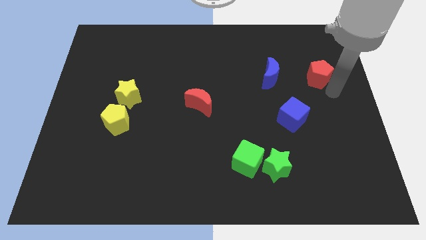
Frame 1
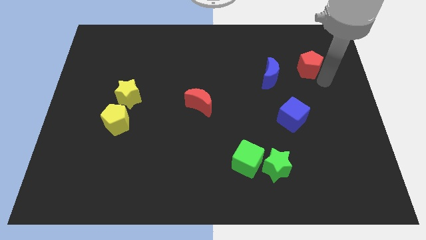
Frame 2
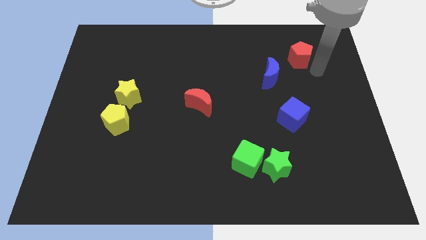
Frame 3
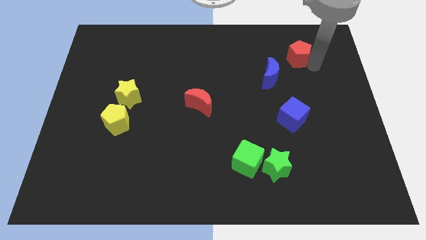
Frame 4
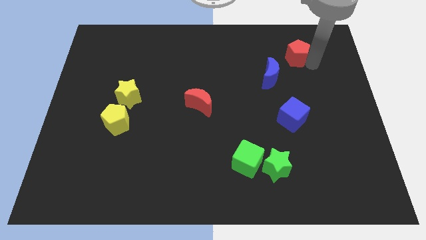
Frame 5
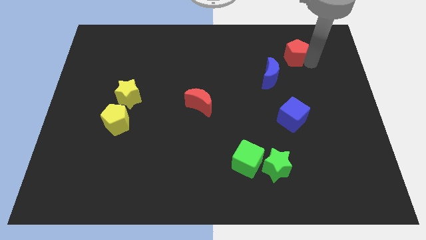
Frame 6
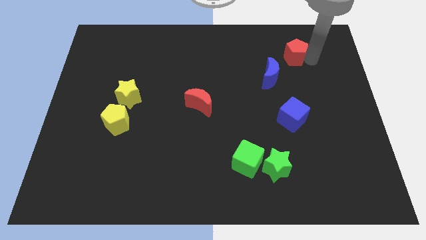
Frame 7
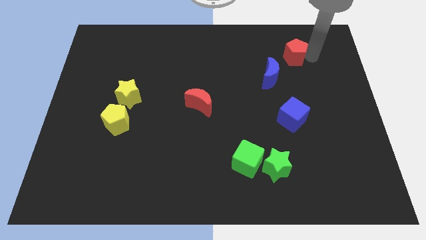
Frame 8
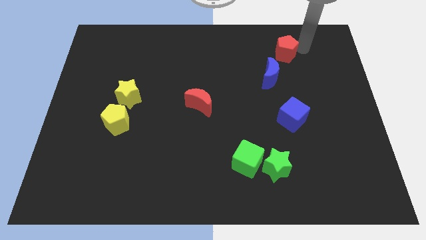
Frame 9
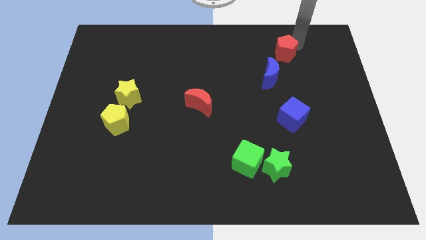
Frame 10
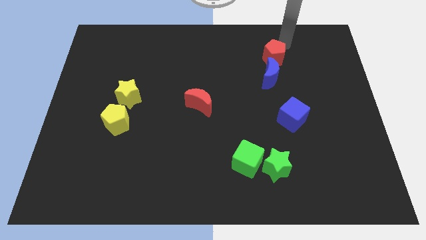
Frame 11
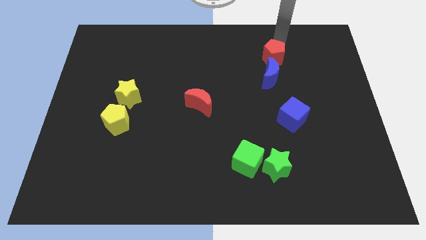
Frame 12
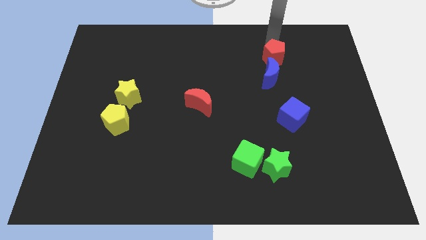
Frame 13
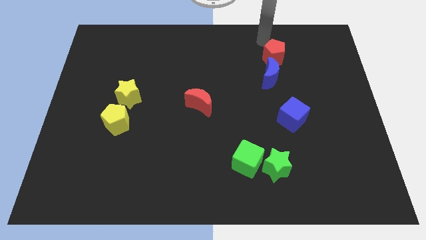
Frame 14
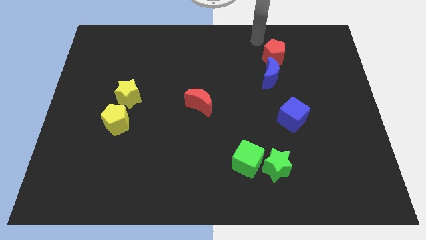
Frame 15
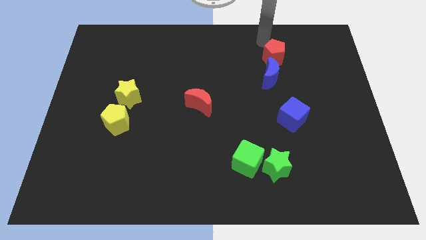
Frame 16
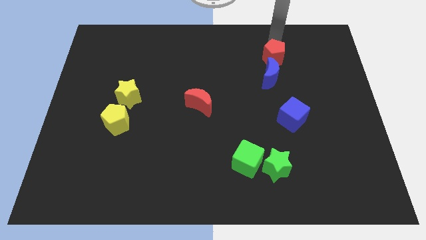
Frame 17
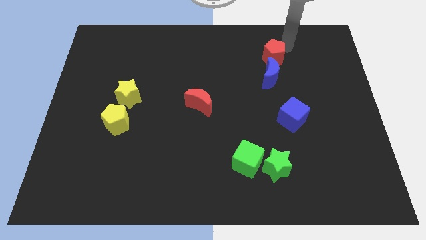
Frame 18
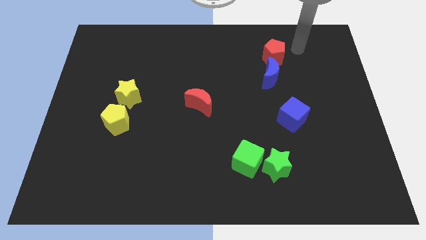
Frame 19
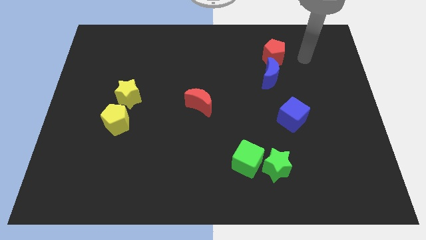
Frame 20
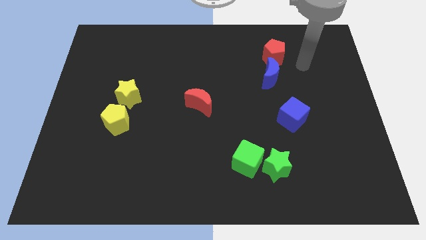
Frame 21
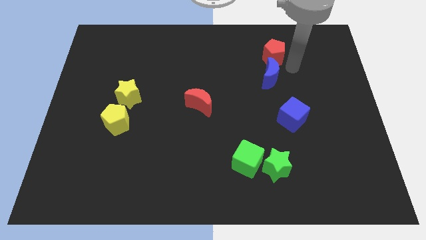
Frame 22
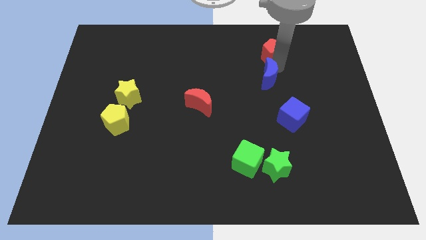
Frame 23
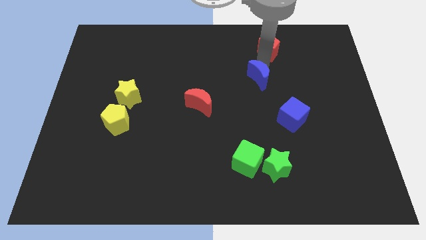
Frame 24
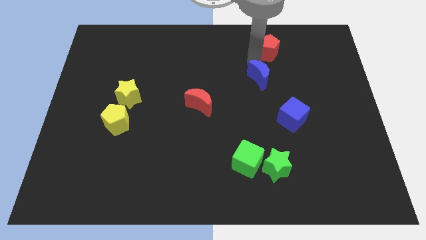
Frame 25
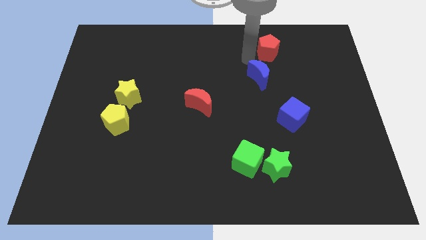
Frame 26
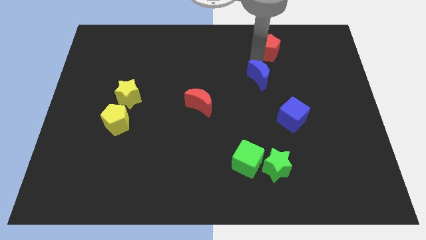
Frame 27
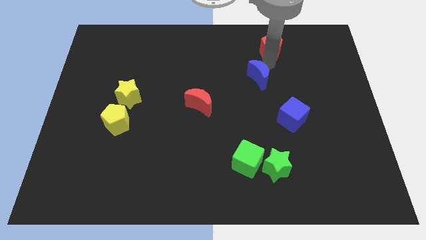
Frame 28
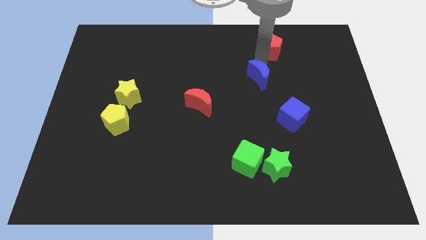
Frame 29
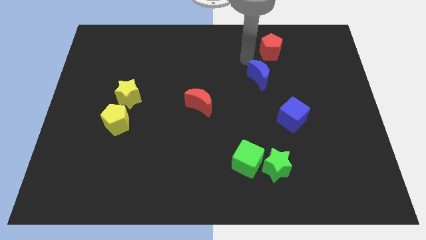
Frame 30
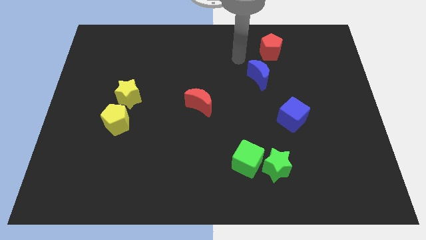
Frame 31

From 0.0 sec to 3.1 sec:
move the red crescent to the top side of the blue moon

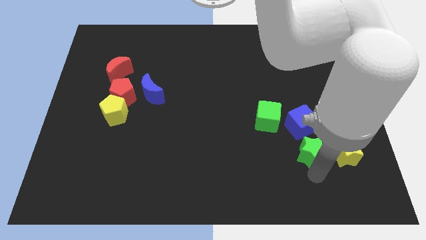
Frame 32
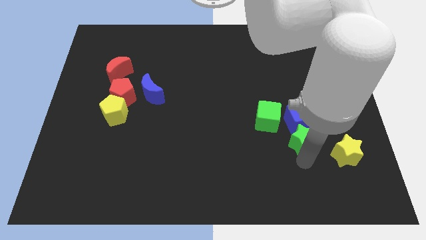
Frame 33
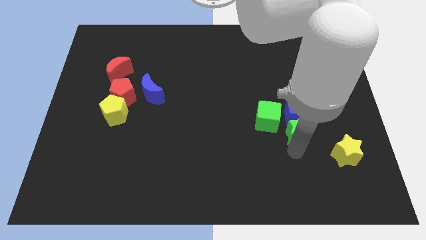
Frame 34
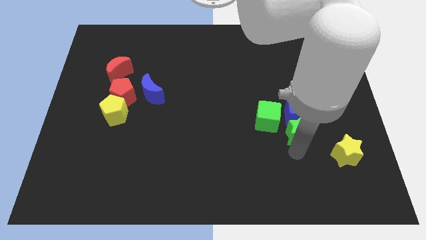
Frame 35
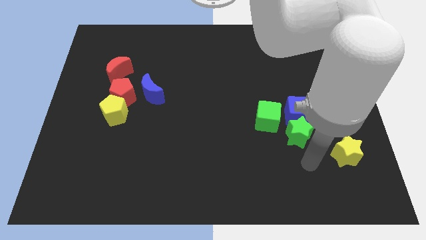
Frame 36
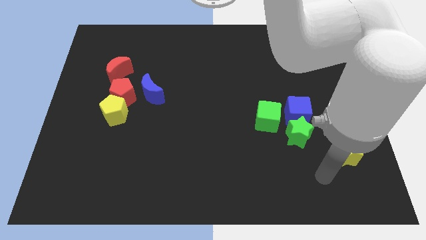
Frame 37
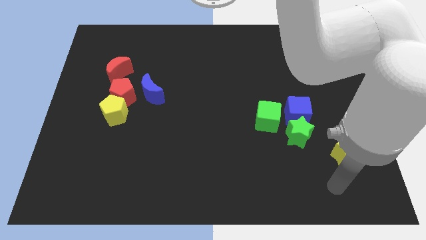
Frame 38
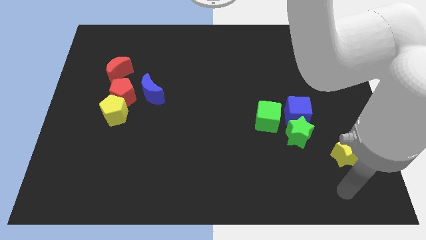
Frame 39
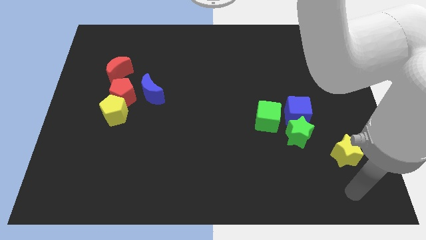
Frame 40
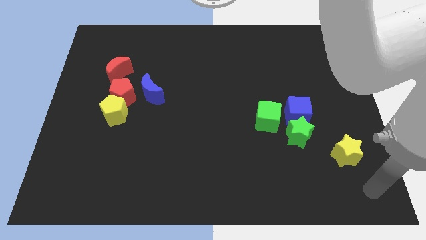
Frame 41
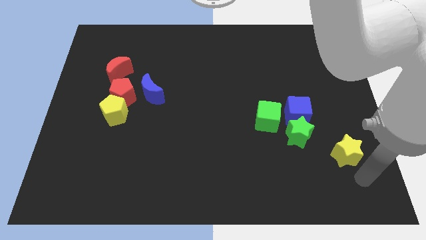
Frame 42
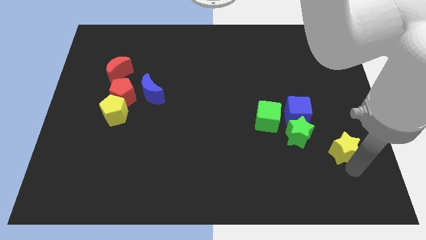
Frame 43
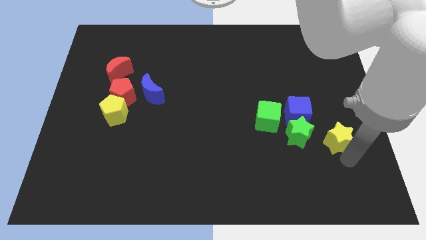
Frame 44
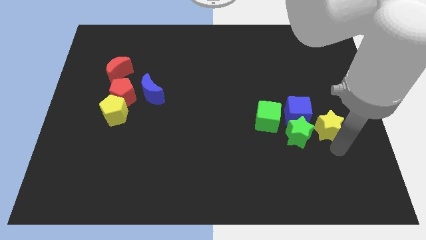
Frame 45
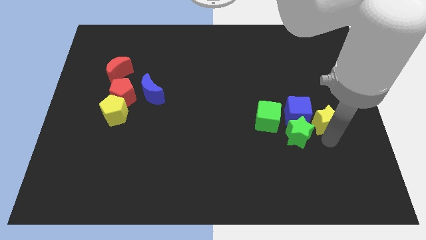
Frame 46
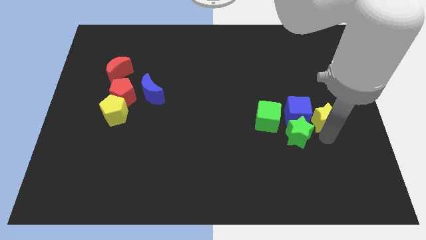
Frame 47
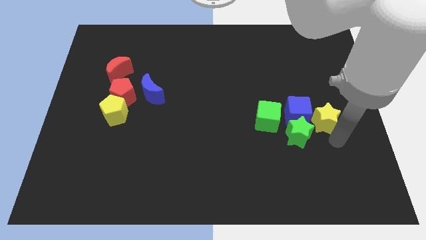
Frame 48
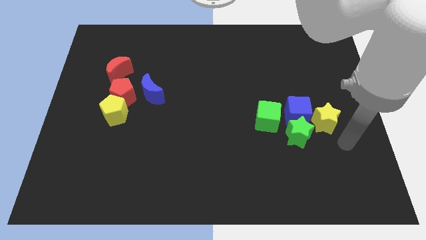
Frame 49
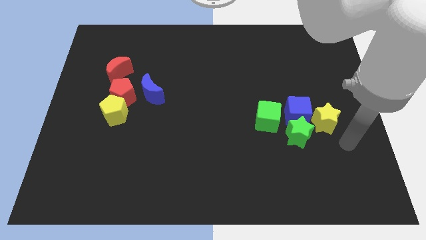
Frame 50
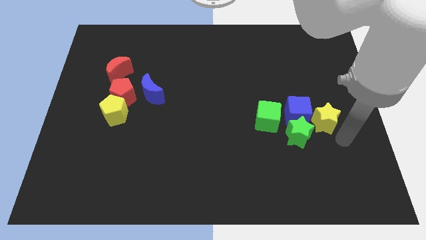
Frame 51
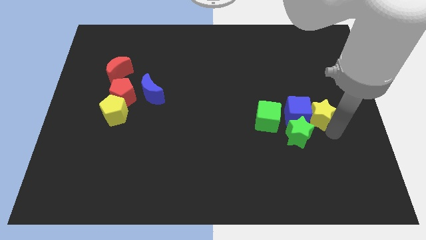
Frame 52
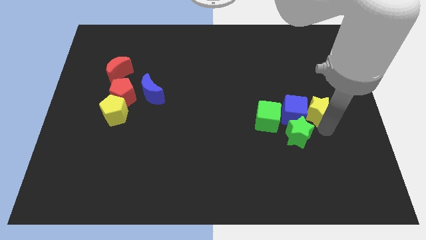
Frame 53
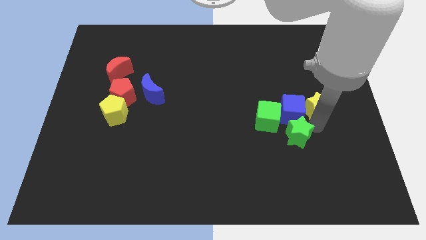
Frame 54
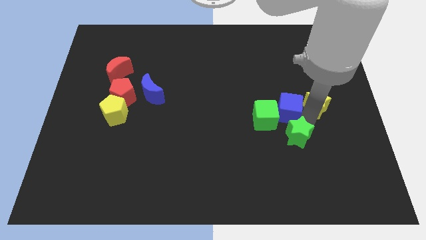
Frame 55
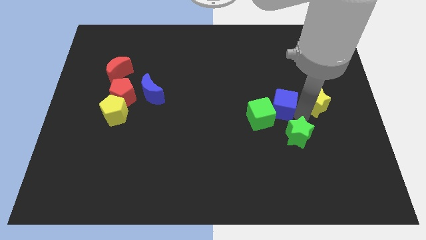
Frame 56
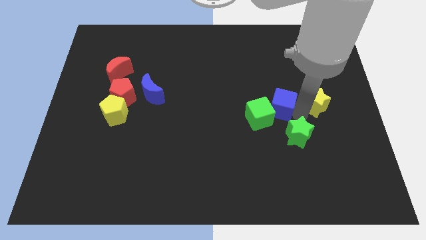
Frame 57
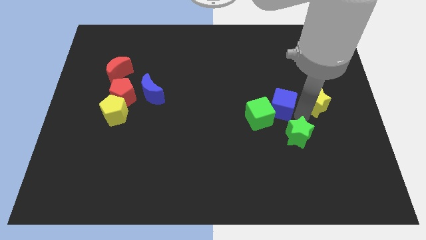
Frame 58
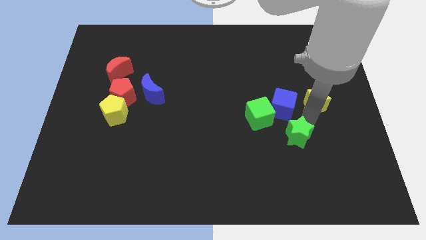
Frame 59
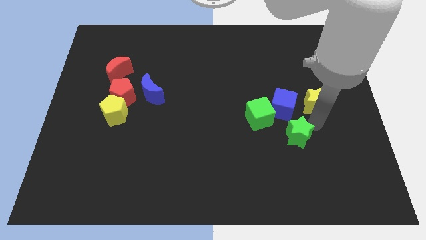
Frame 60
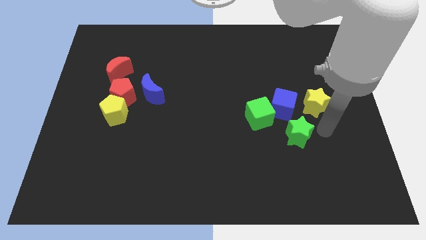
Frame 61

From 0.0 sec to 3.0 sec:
push green and yellow star towards blue cube

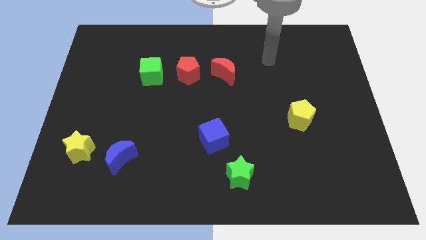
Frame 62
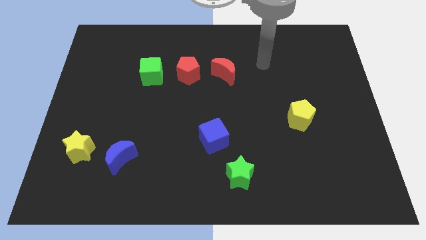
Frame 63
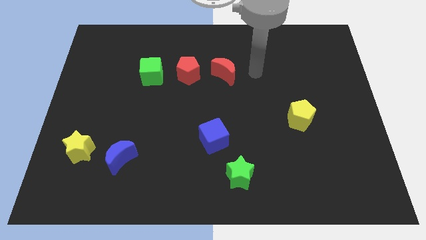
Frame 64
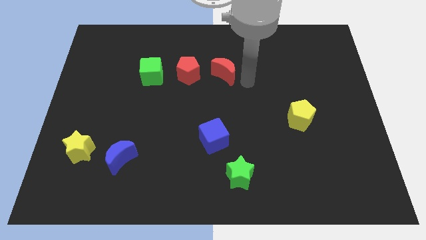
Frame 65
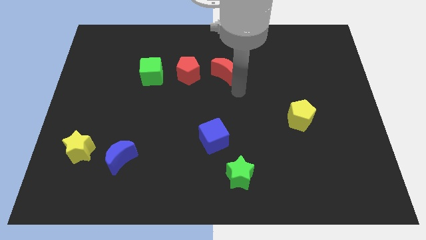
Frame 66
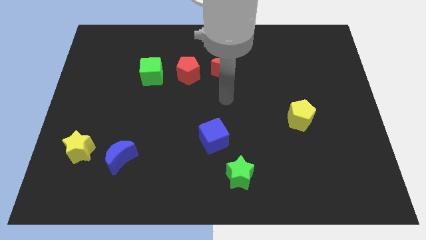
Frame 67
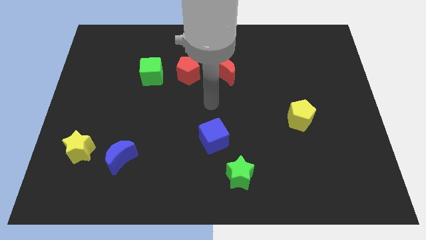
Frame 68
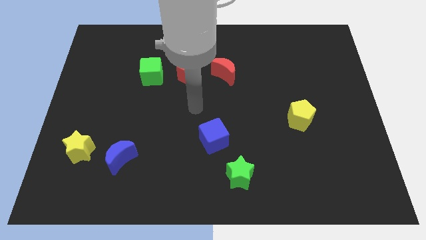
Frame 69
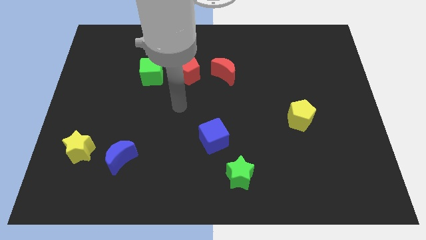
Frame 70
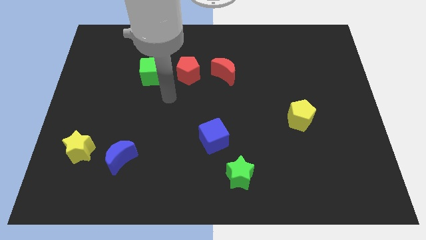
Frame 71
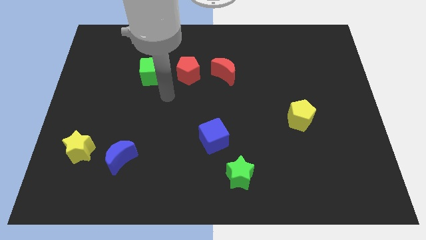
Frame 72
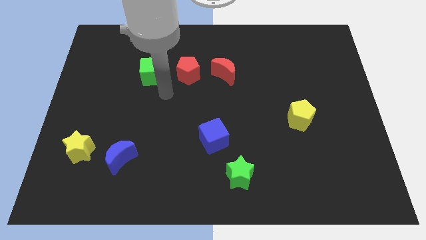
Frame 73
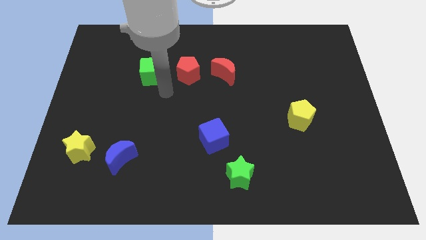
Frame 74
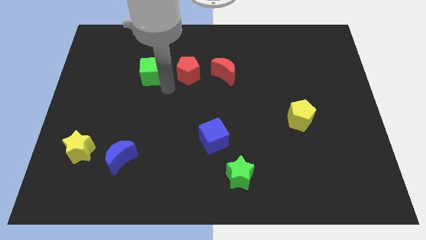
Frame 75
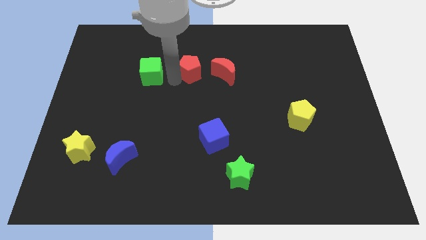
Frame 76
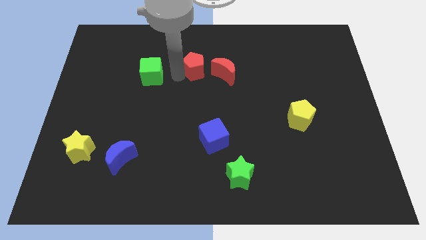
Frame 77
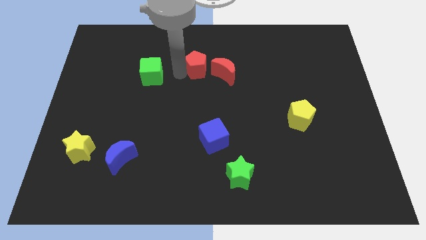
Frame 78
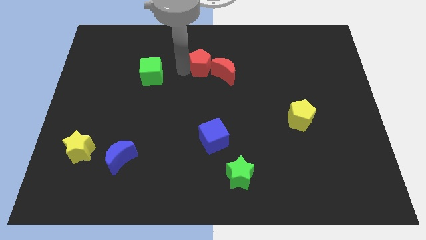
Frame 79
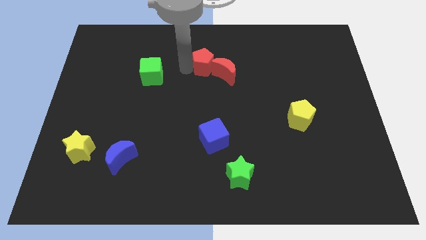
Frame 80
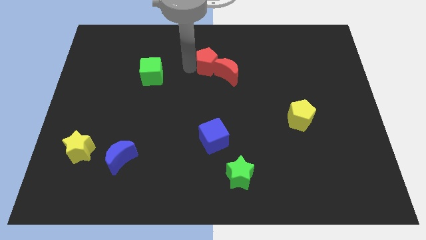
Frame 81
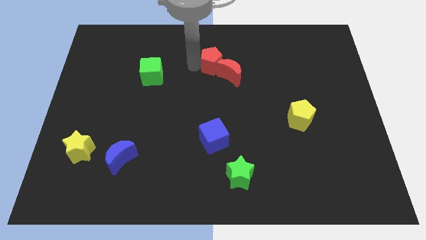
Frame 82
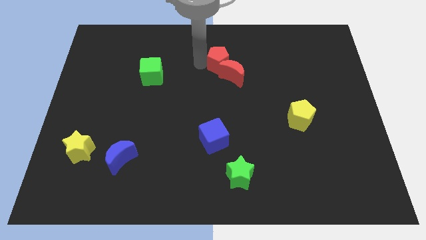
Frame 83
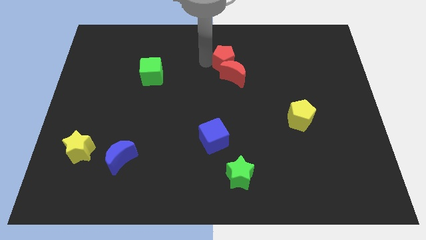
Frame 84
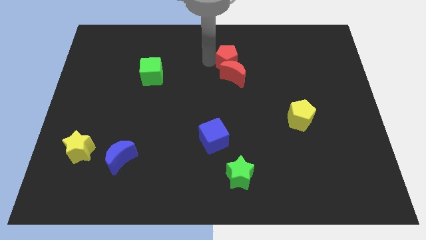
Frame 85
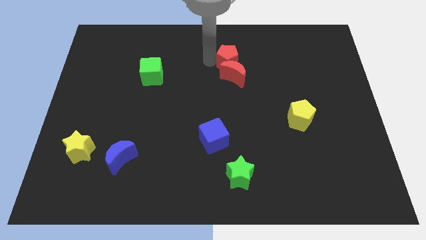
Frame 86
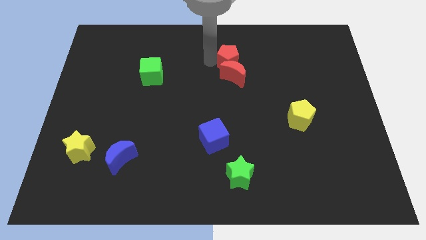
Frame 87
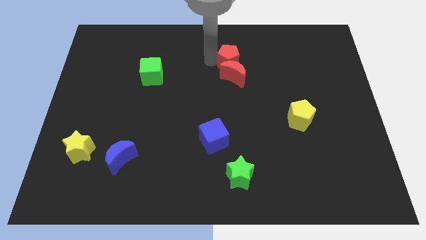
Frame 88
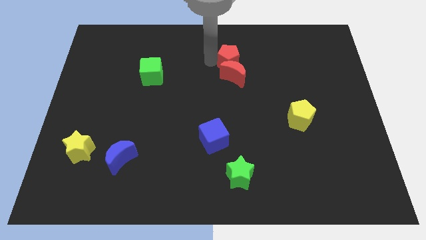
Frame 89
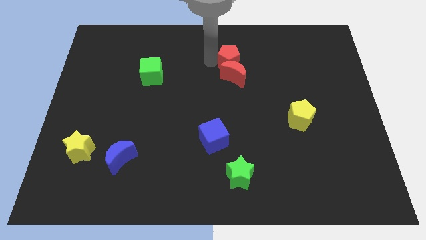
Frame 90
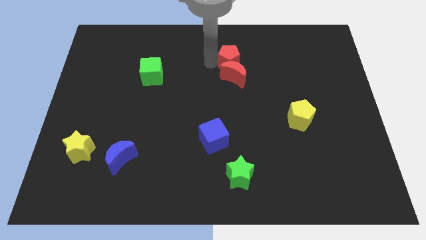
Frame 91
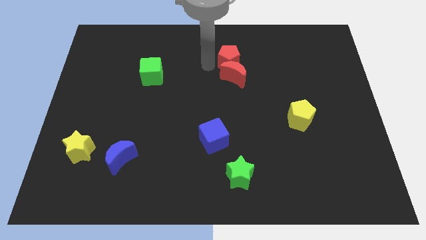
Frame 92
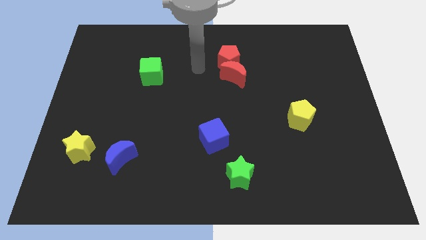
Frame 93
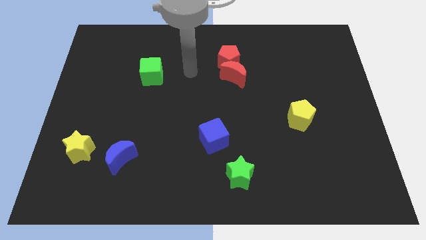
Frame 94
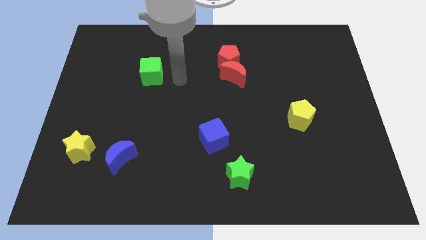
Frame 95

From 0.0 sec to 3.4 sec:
place the red pentagon above the red moon
